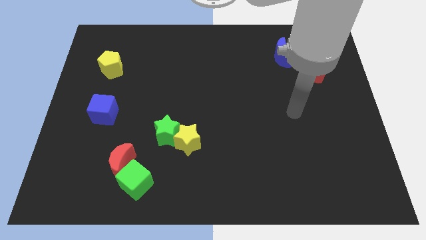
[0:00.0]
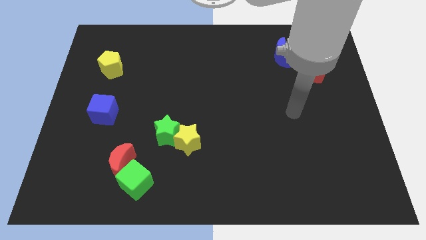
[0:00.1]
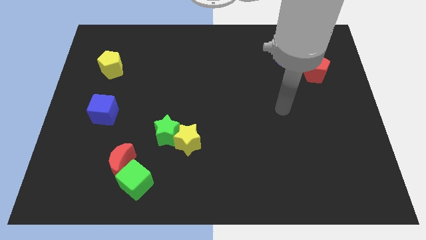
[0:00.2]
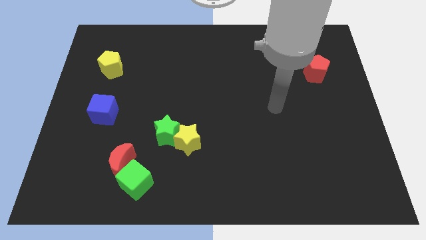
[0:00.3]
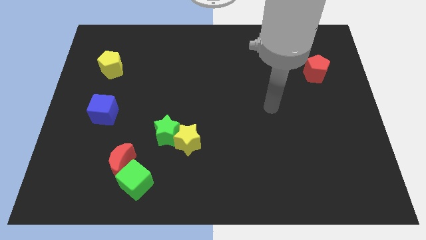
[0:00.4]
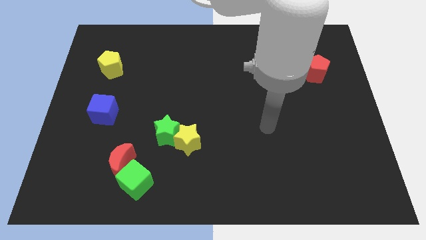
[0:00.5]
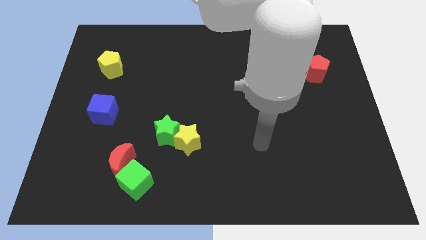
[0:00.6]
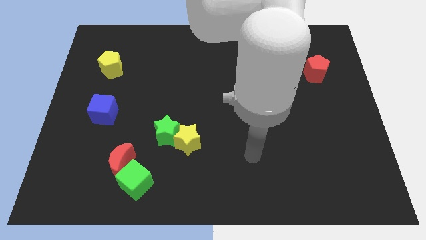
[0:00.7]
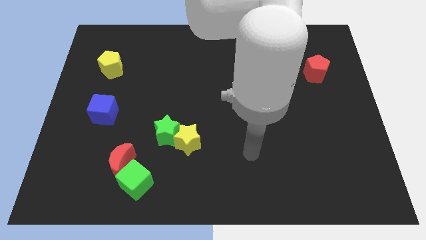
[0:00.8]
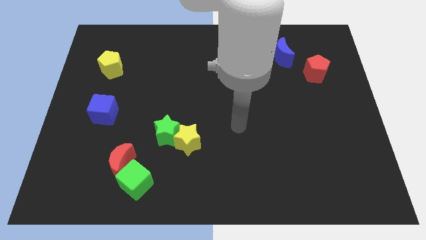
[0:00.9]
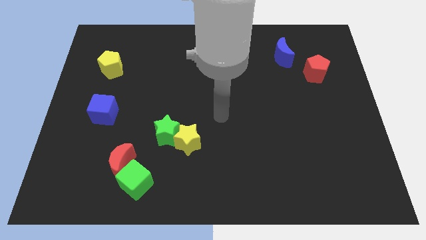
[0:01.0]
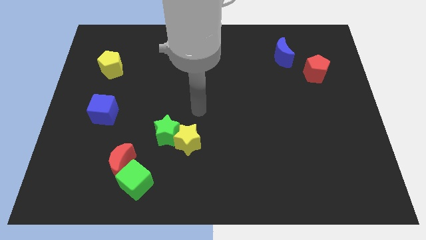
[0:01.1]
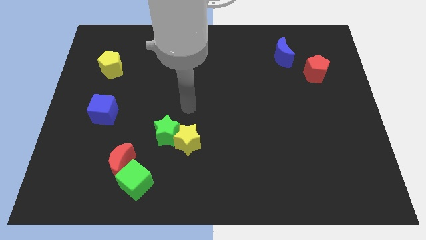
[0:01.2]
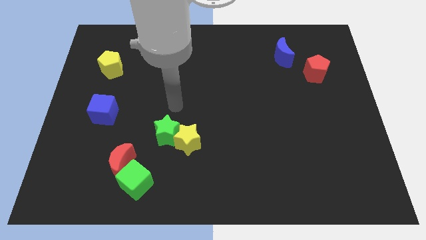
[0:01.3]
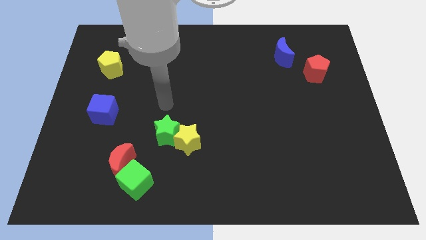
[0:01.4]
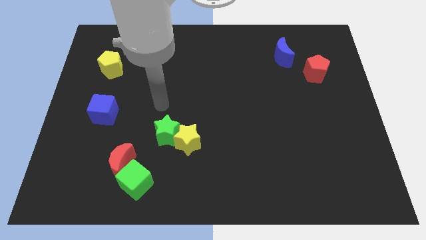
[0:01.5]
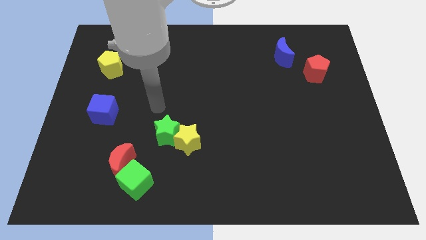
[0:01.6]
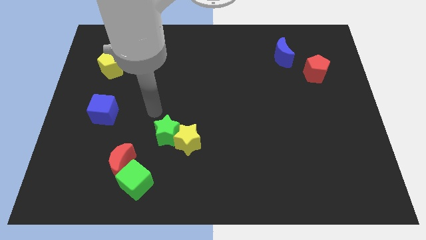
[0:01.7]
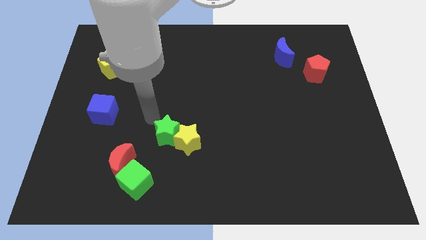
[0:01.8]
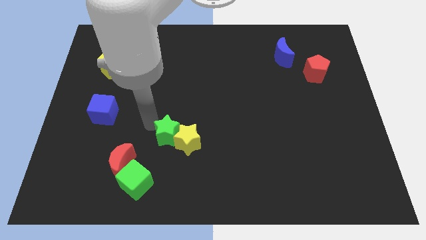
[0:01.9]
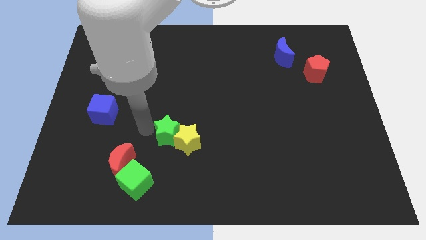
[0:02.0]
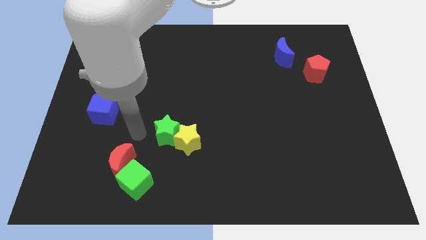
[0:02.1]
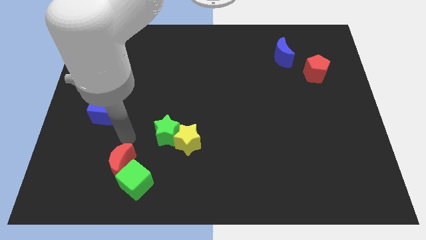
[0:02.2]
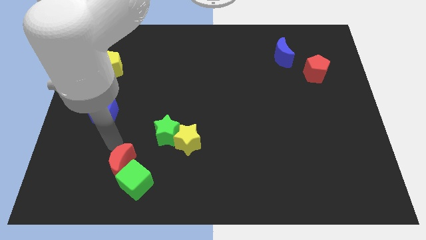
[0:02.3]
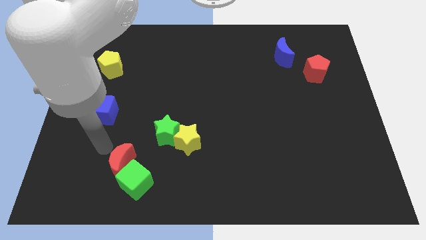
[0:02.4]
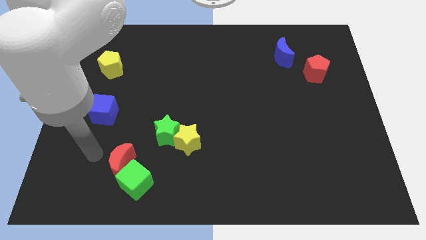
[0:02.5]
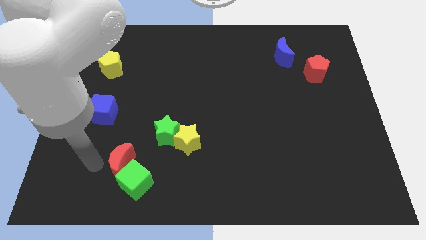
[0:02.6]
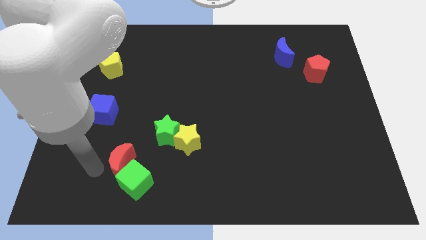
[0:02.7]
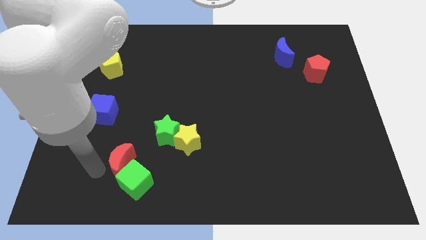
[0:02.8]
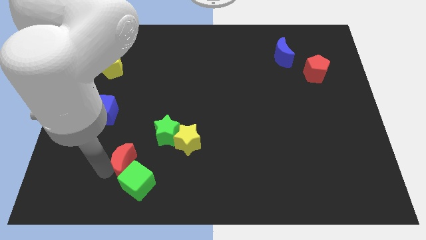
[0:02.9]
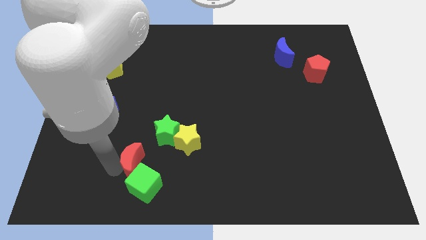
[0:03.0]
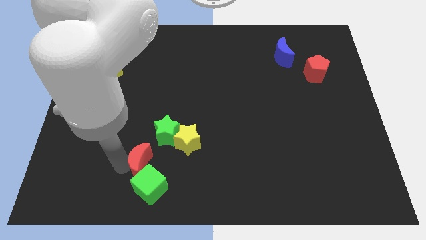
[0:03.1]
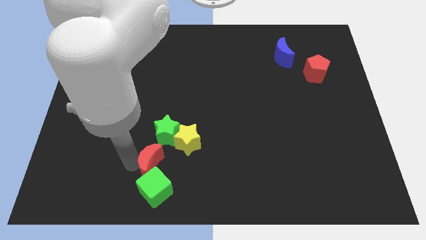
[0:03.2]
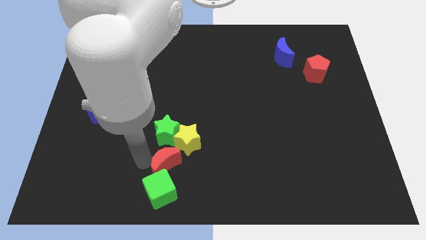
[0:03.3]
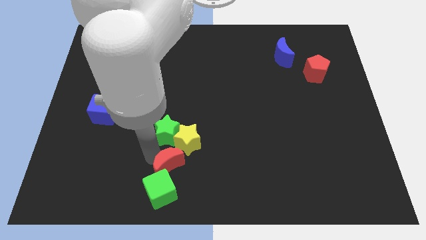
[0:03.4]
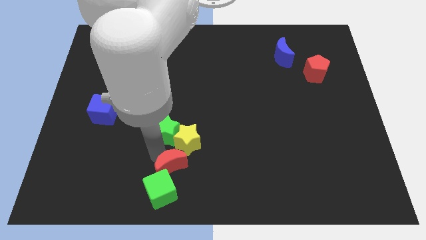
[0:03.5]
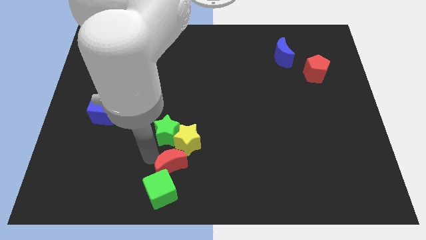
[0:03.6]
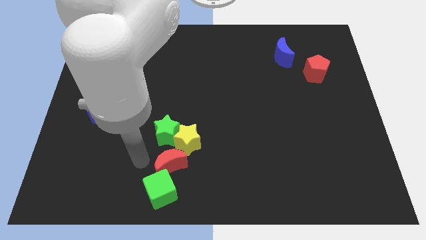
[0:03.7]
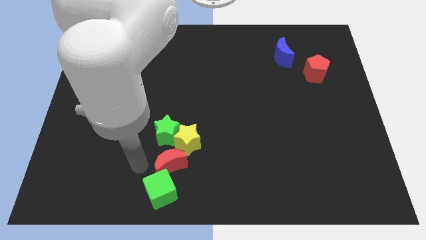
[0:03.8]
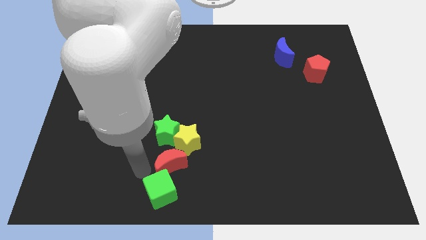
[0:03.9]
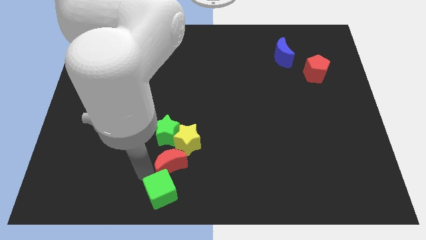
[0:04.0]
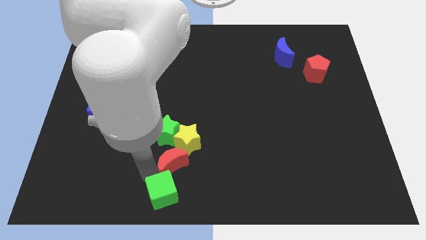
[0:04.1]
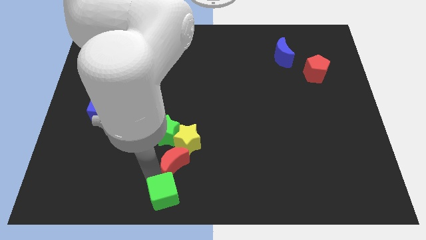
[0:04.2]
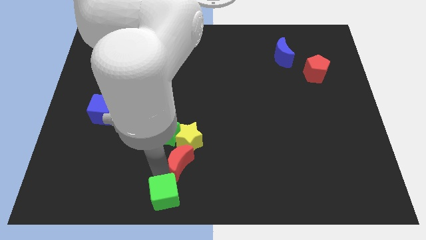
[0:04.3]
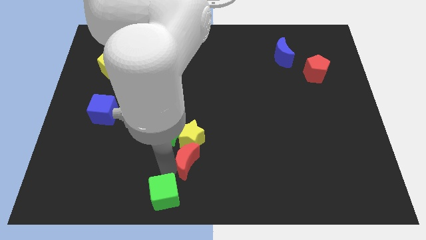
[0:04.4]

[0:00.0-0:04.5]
move the red moon close to the yellow star

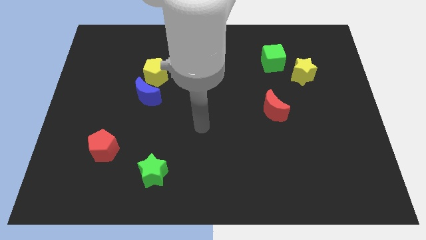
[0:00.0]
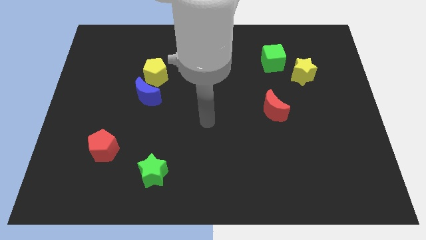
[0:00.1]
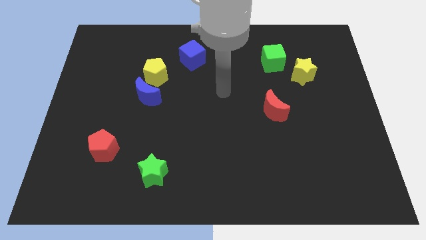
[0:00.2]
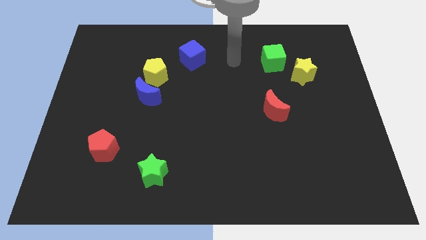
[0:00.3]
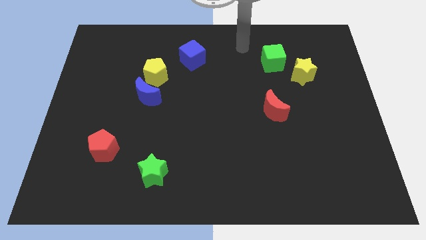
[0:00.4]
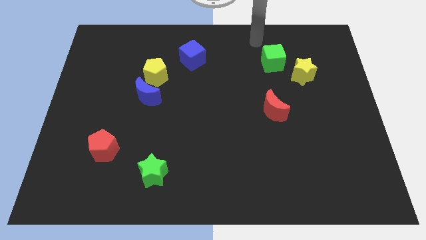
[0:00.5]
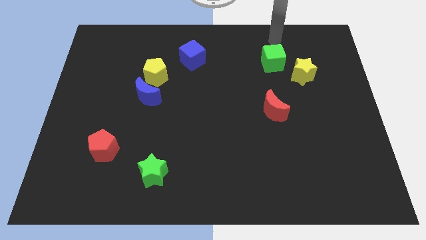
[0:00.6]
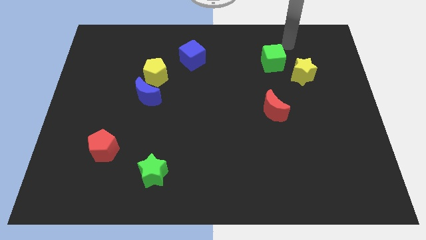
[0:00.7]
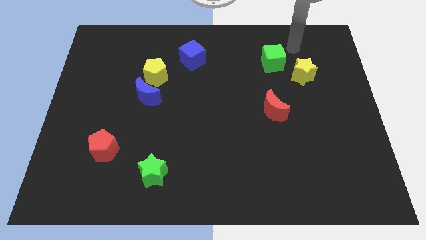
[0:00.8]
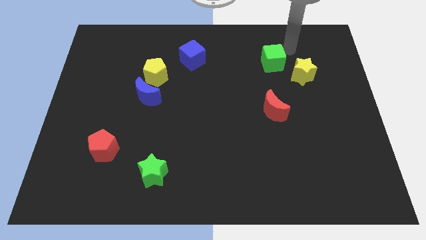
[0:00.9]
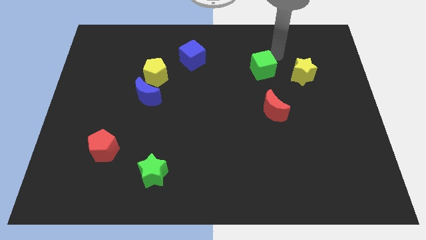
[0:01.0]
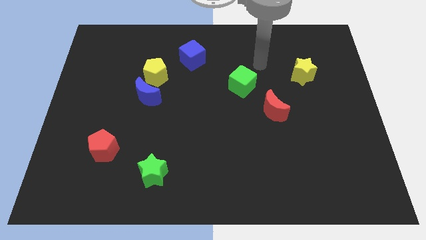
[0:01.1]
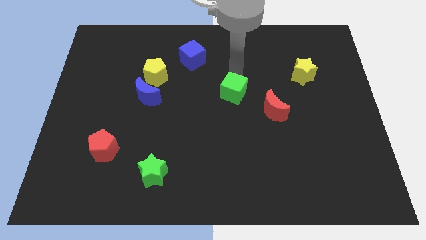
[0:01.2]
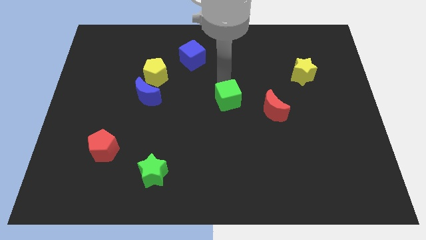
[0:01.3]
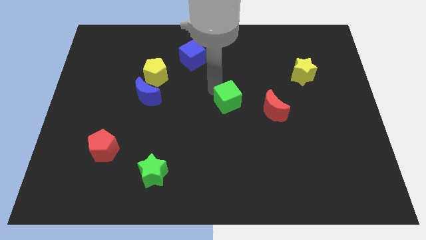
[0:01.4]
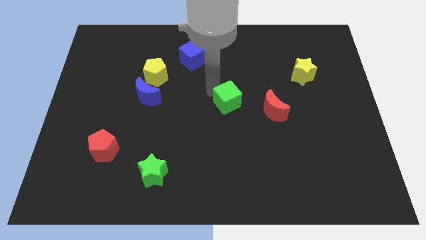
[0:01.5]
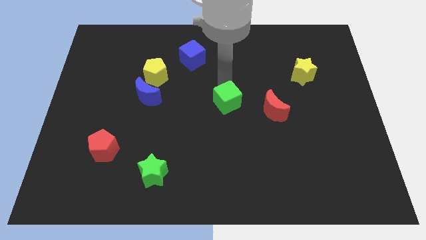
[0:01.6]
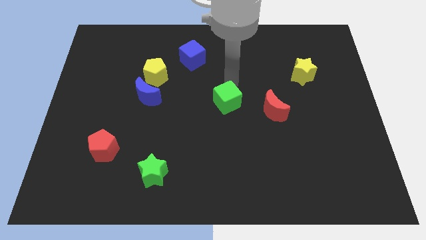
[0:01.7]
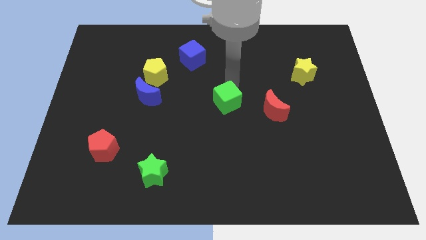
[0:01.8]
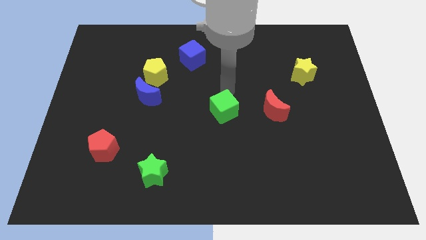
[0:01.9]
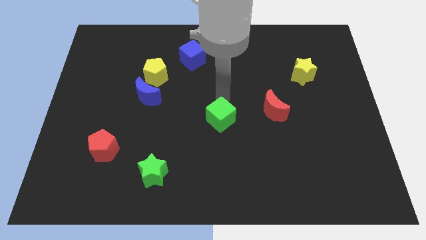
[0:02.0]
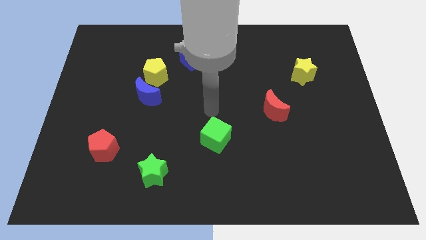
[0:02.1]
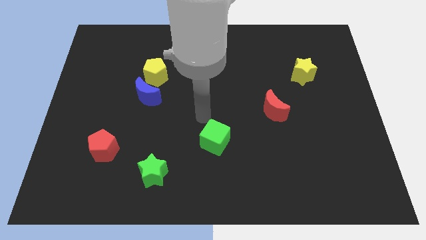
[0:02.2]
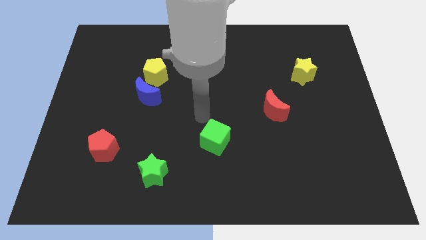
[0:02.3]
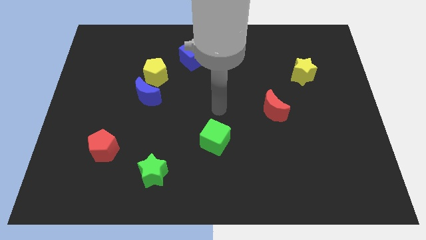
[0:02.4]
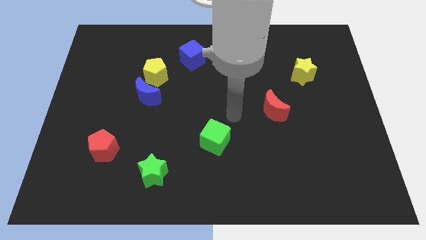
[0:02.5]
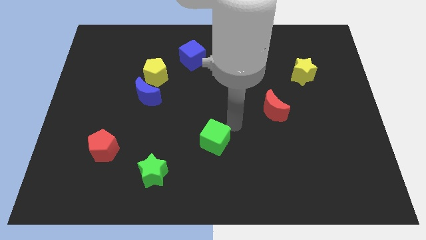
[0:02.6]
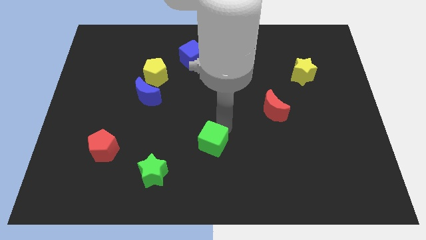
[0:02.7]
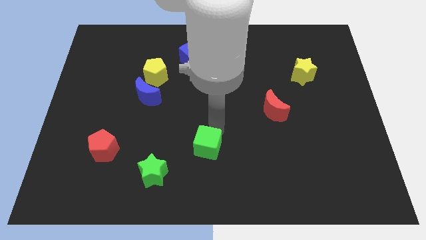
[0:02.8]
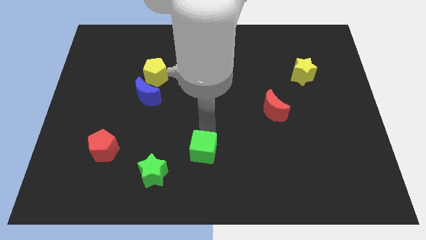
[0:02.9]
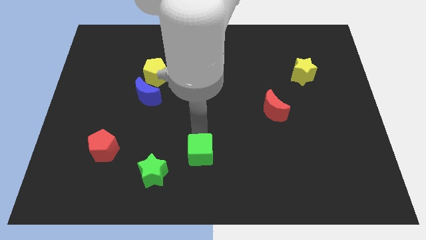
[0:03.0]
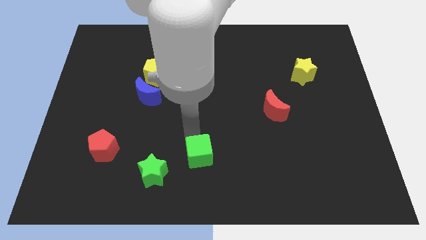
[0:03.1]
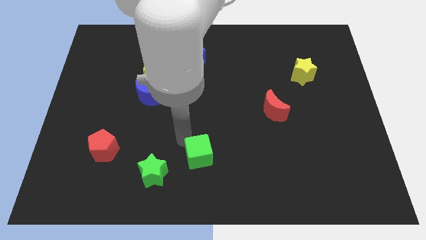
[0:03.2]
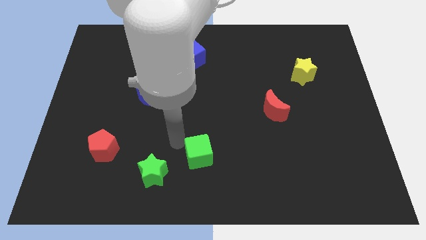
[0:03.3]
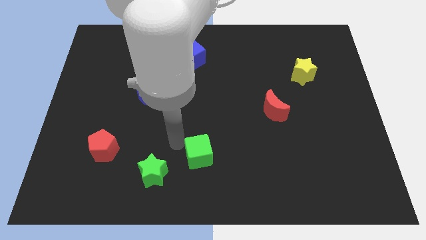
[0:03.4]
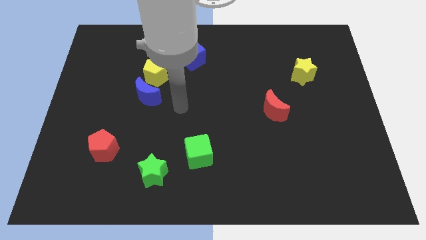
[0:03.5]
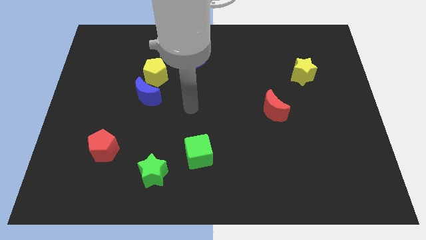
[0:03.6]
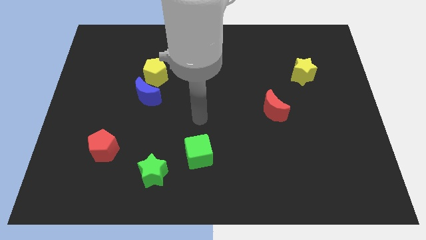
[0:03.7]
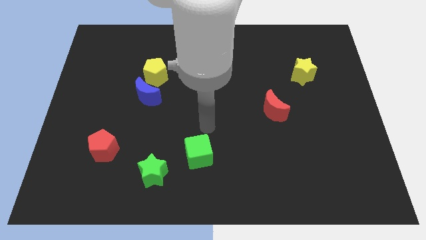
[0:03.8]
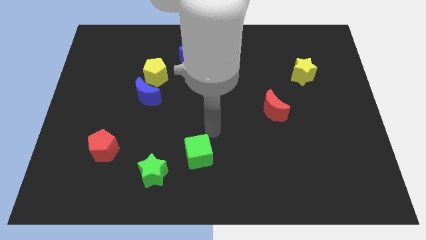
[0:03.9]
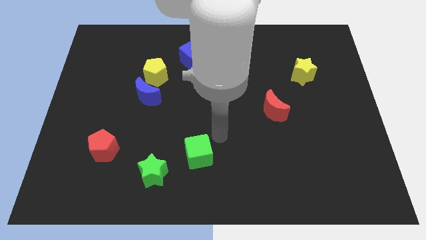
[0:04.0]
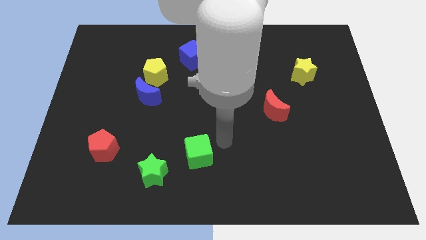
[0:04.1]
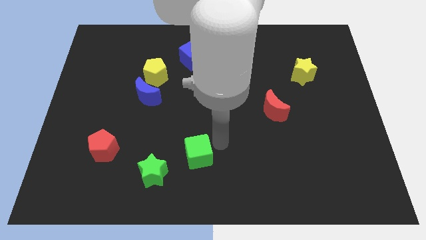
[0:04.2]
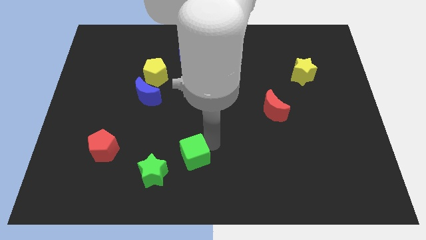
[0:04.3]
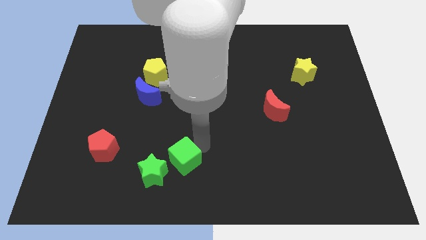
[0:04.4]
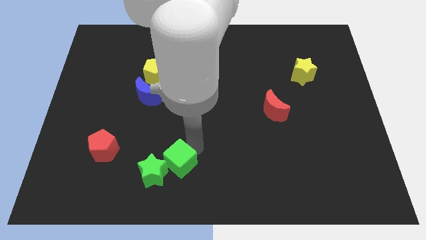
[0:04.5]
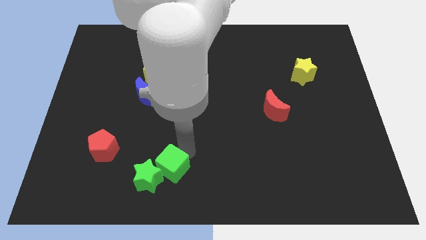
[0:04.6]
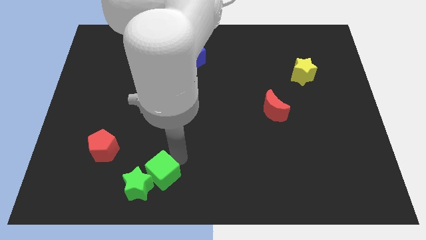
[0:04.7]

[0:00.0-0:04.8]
push the green cube next to the green star
